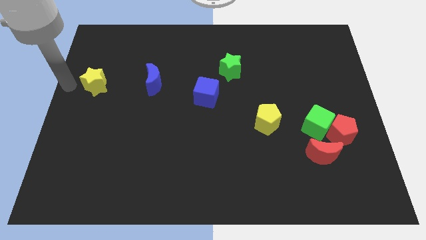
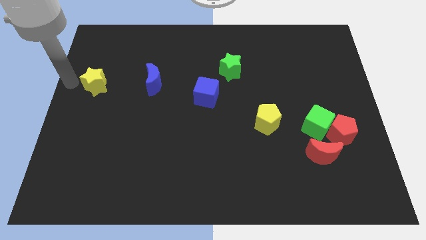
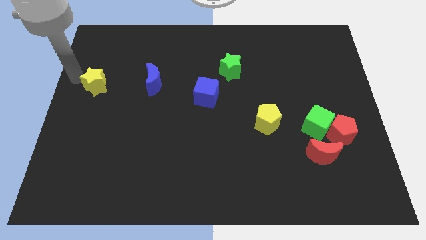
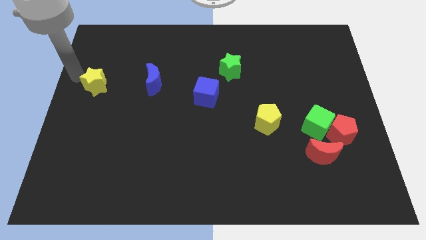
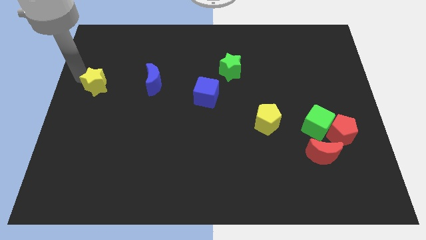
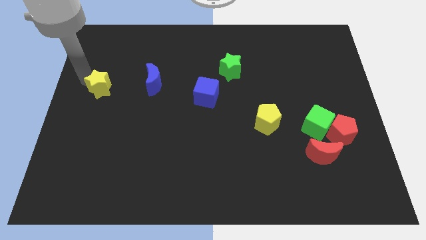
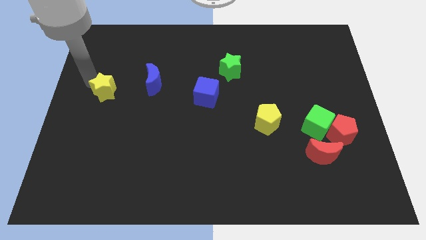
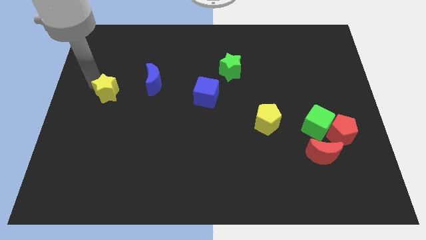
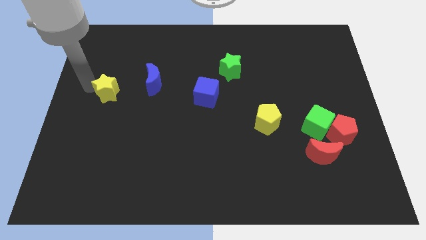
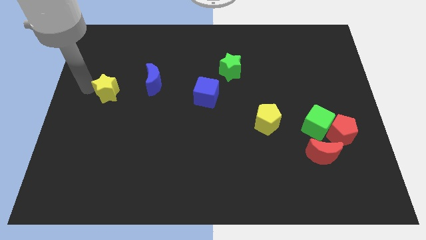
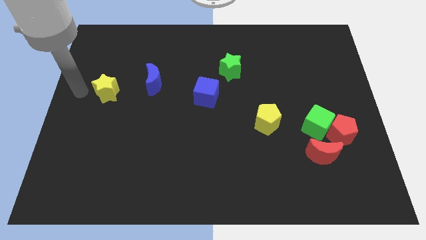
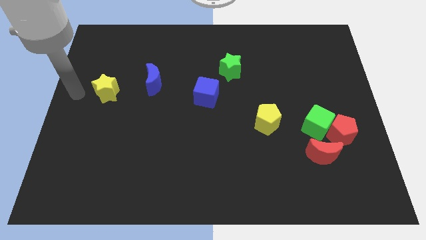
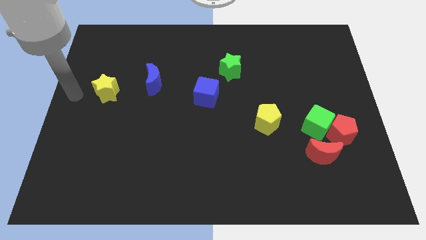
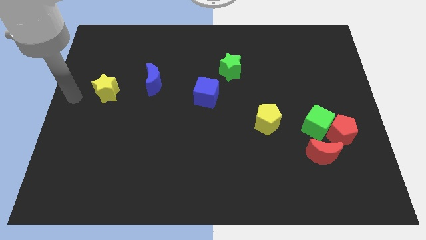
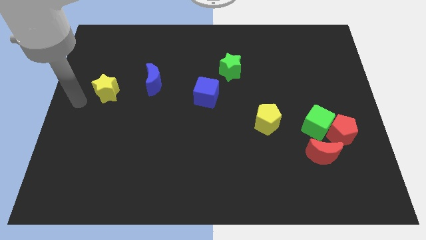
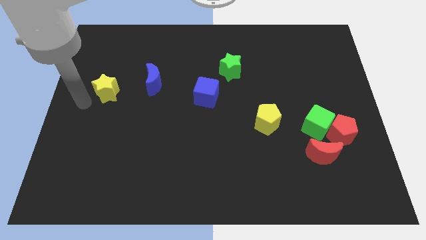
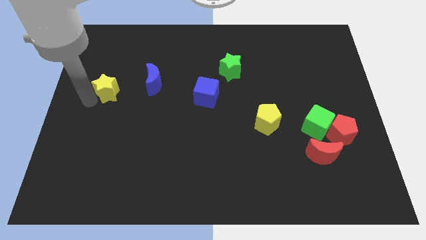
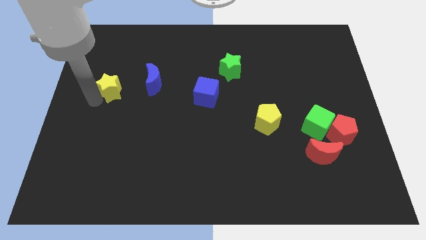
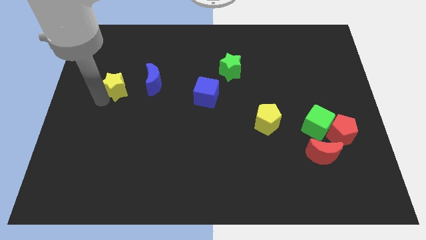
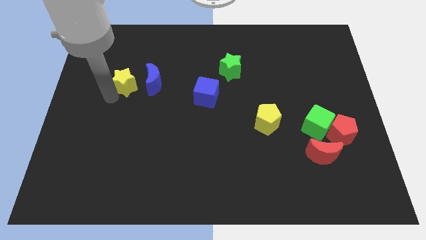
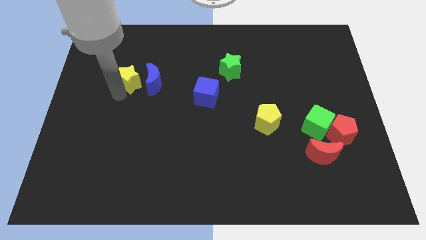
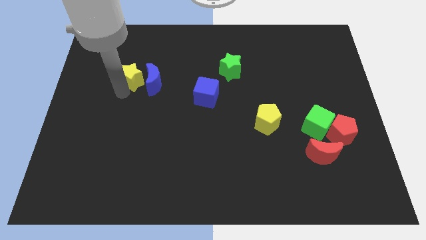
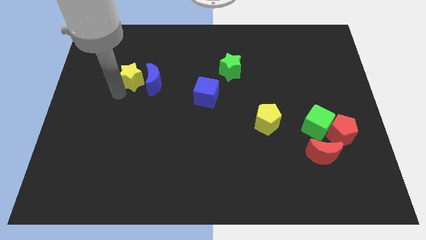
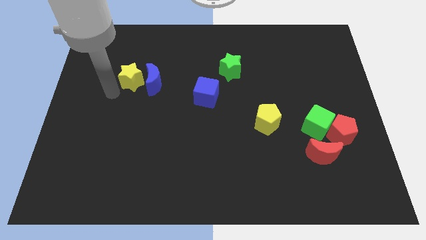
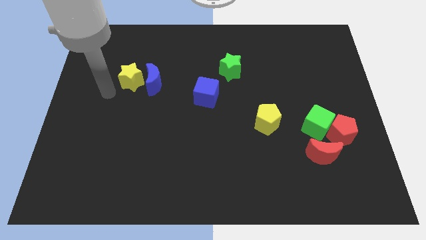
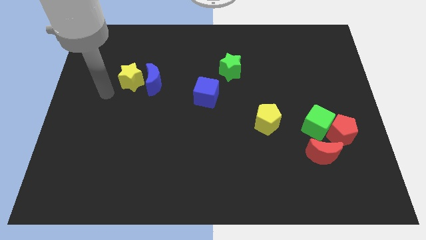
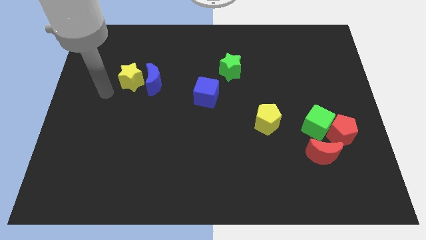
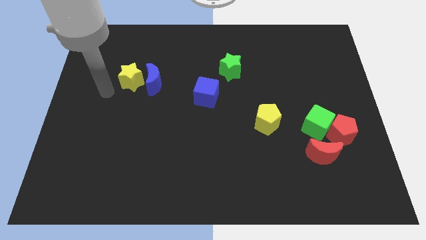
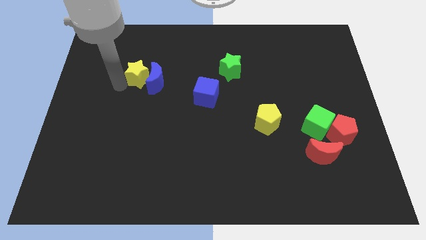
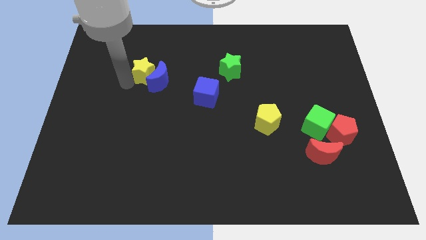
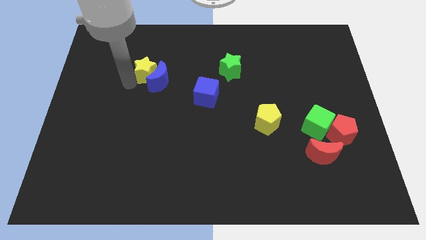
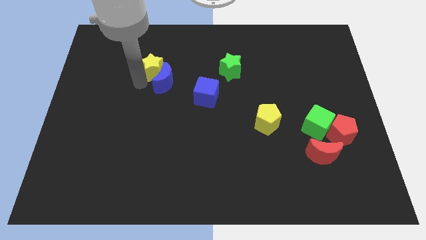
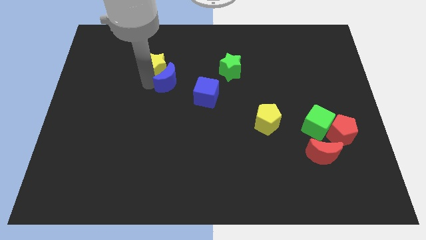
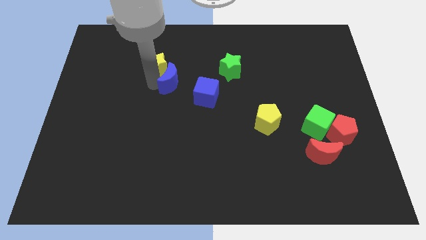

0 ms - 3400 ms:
move the yellow star into the blue crescent

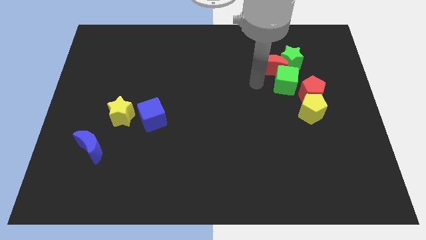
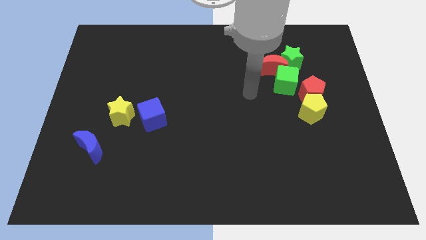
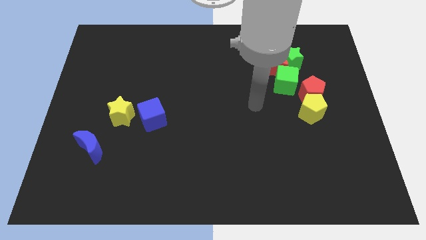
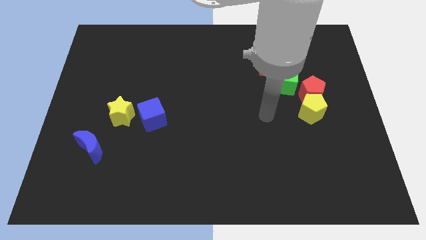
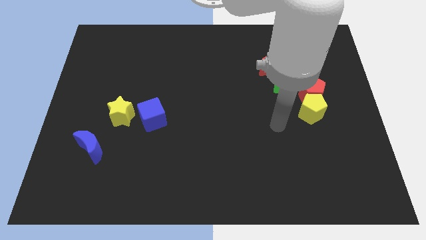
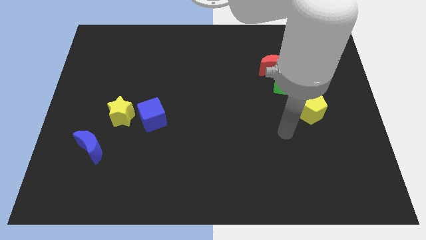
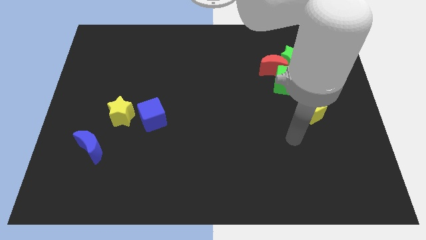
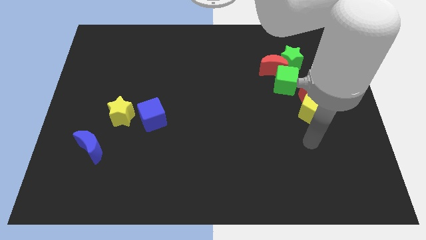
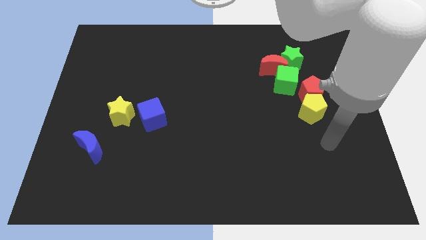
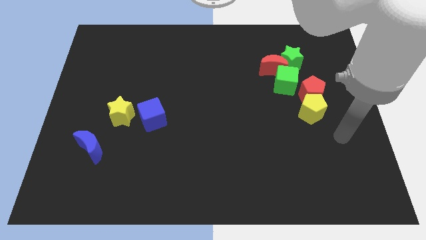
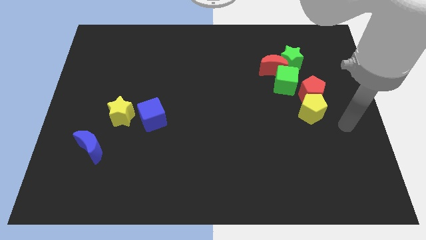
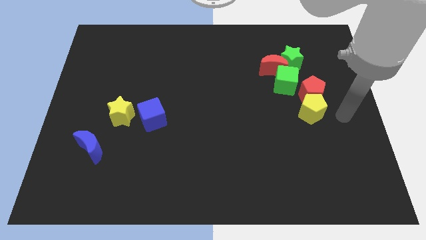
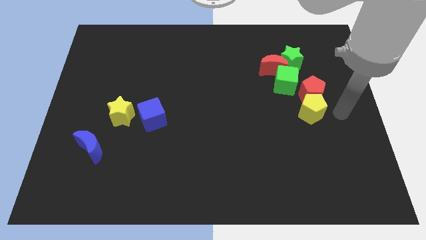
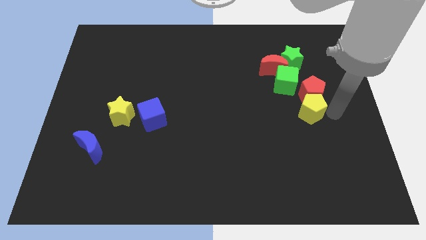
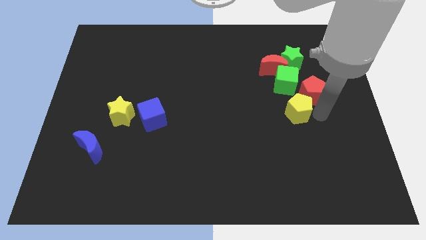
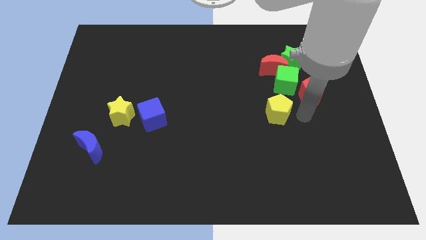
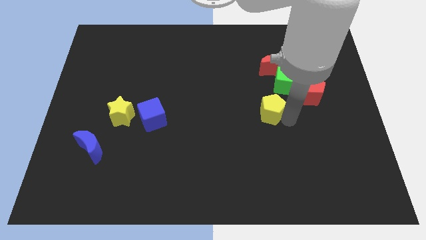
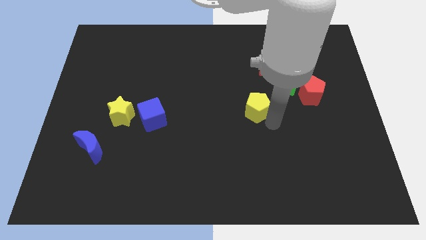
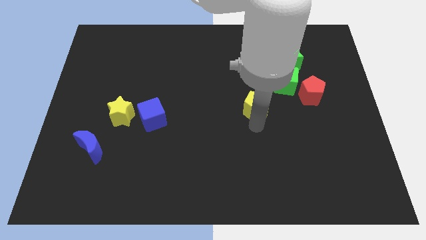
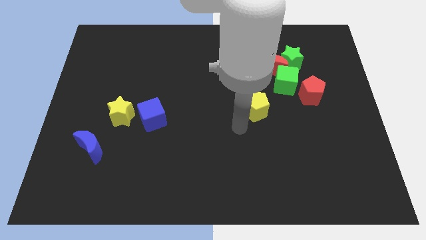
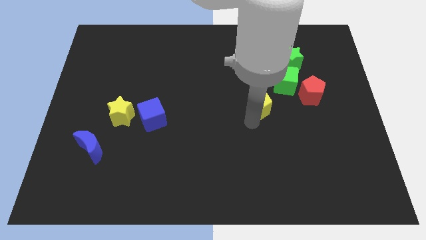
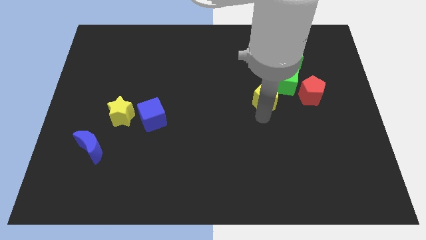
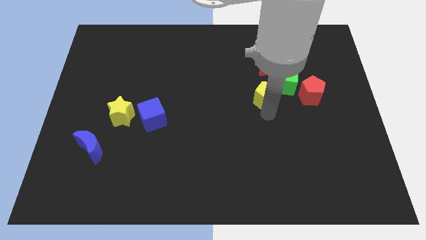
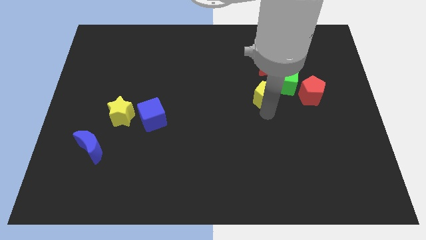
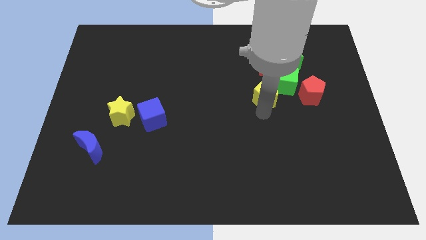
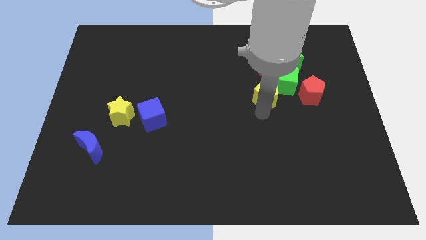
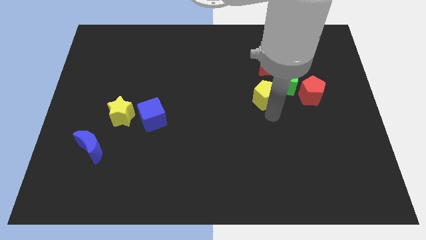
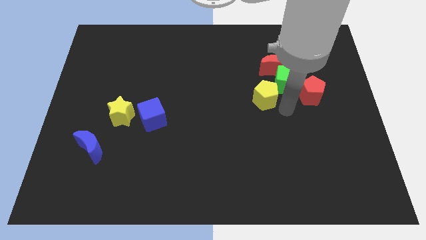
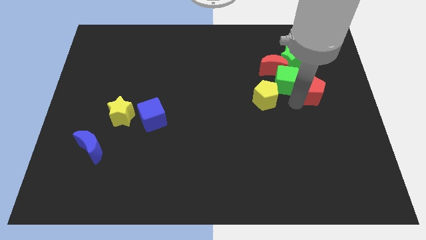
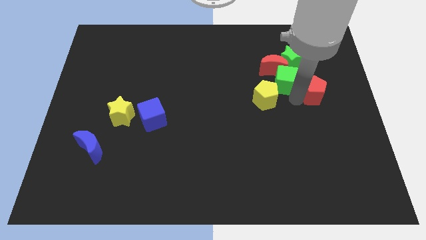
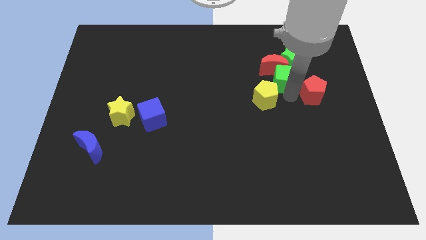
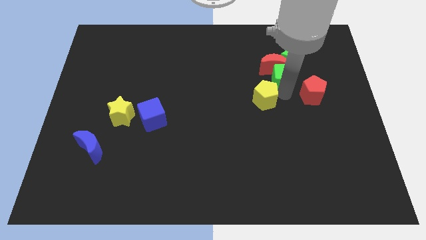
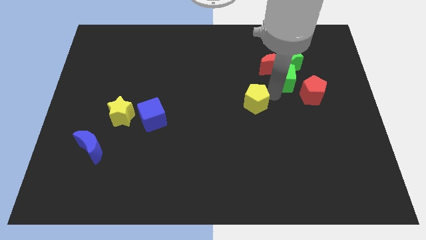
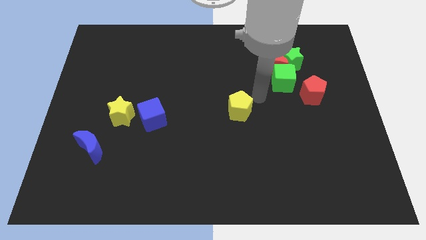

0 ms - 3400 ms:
move the yellow pentagon to left side of green cube

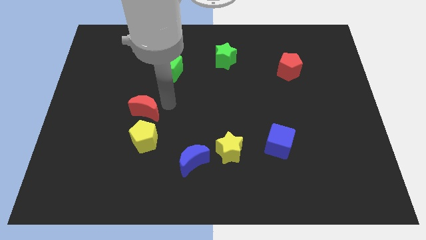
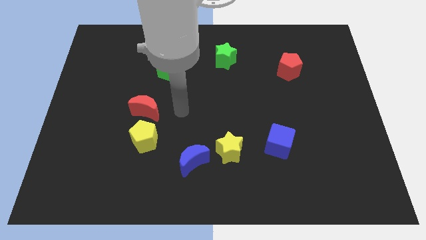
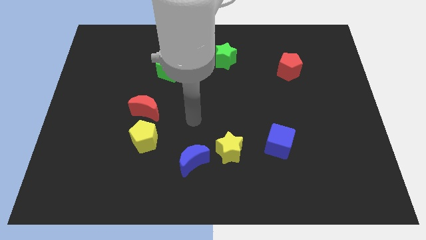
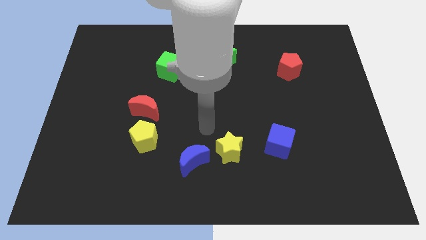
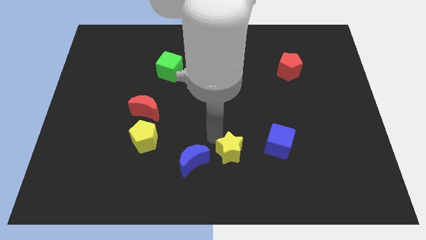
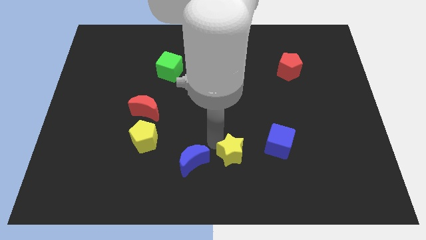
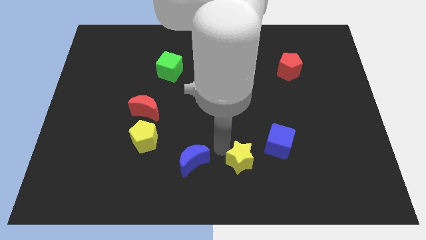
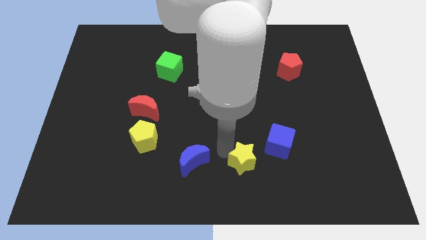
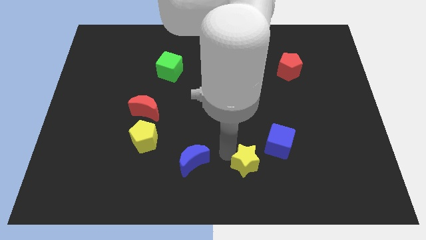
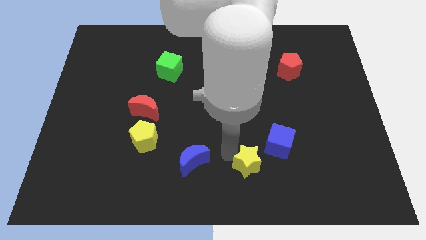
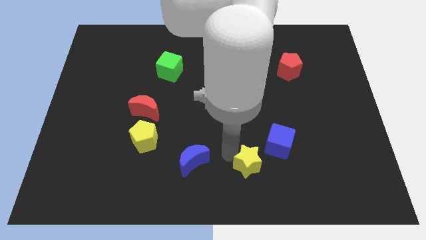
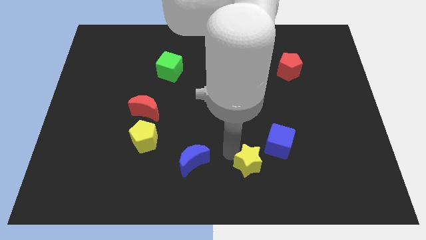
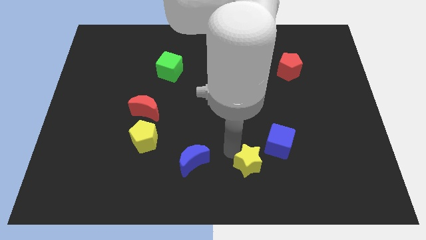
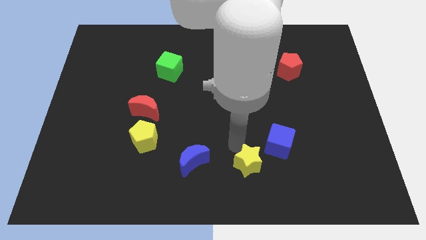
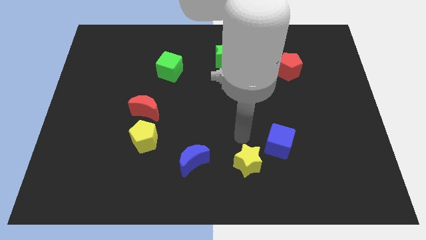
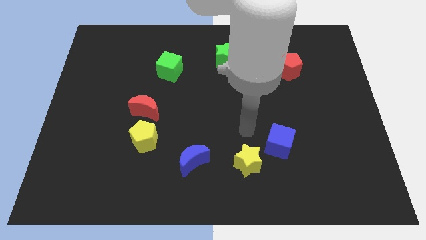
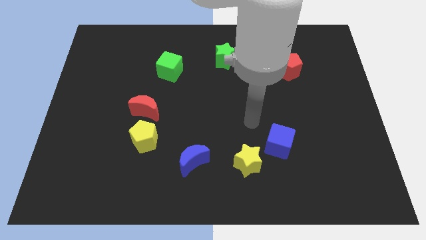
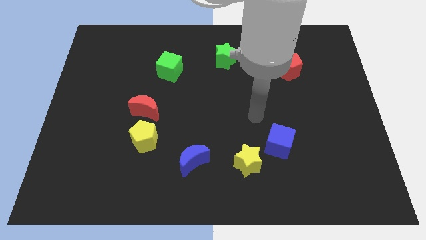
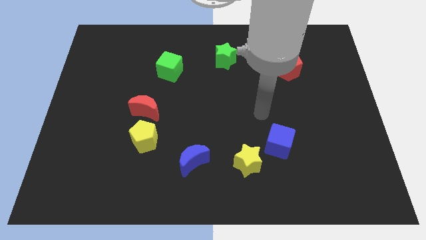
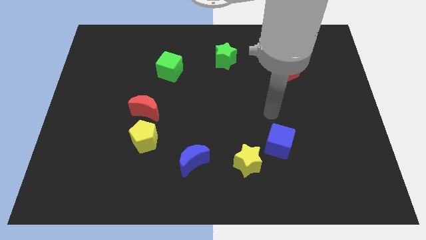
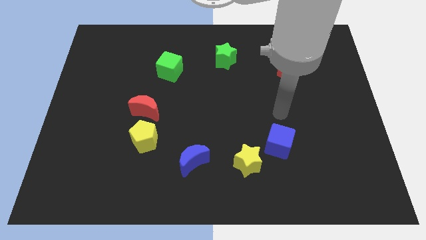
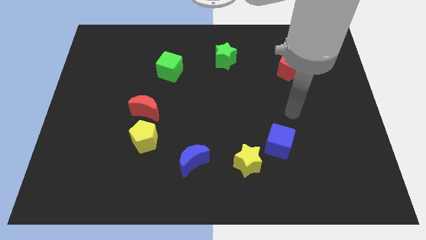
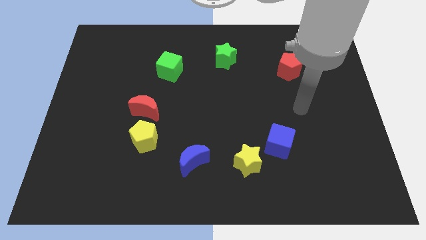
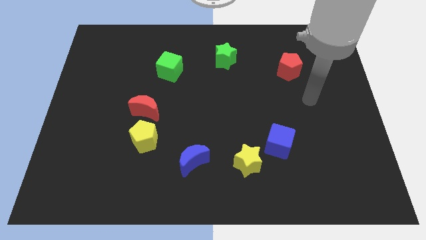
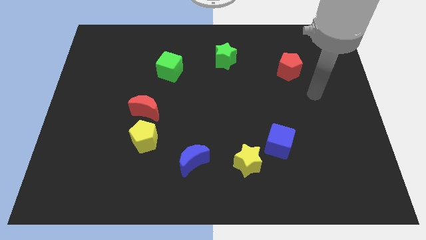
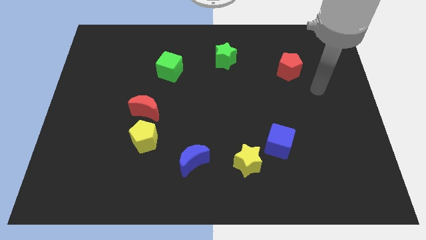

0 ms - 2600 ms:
move the yellow star parallel to the right of the blue moon
